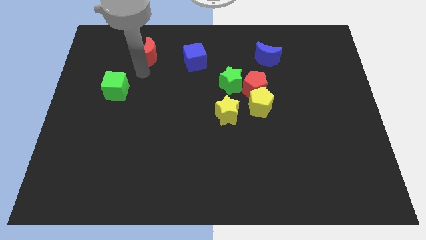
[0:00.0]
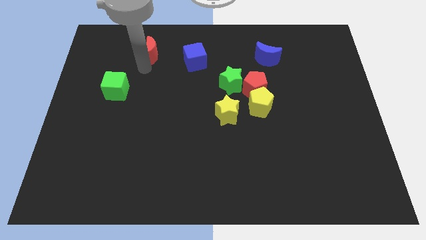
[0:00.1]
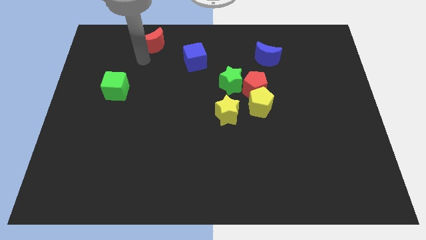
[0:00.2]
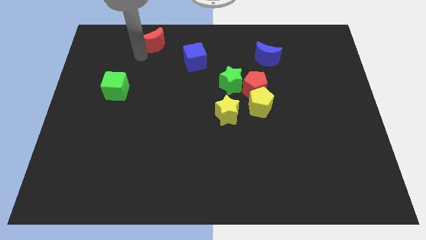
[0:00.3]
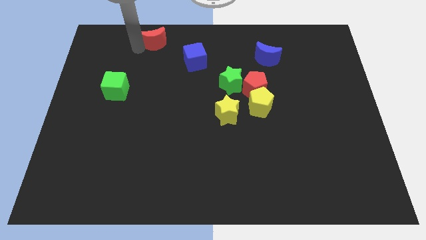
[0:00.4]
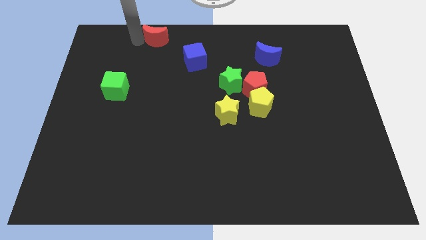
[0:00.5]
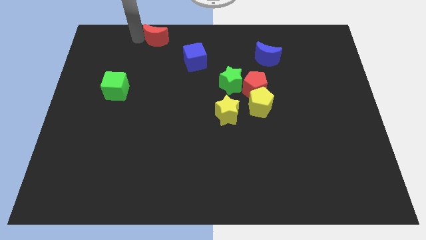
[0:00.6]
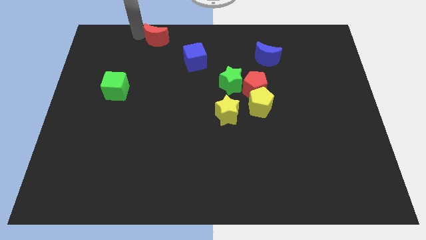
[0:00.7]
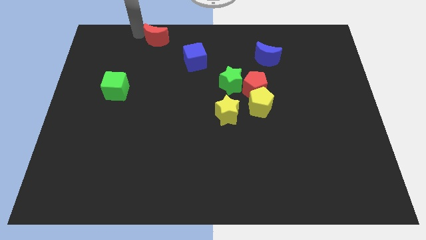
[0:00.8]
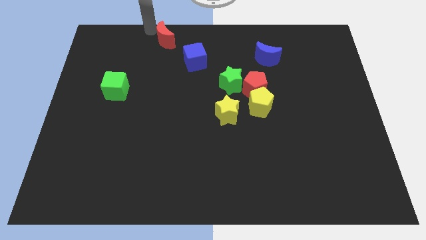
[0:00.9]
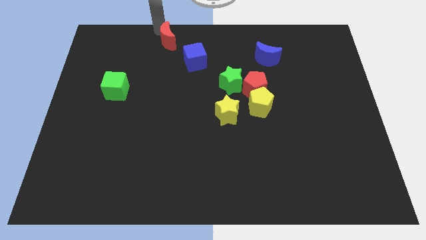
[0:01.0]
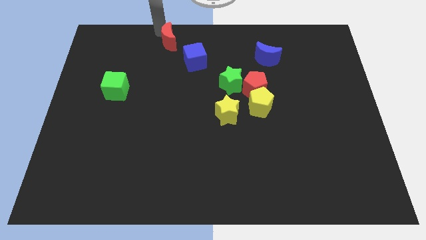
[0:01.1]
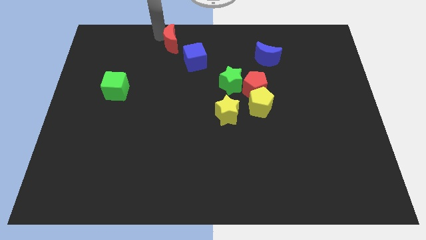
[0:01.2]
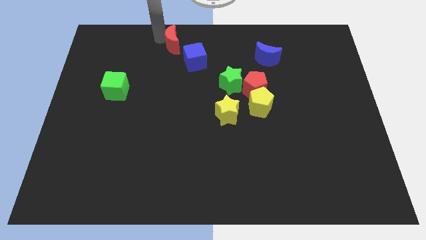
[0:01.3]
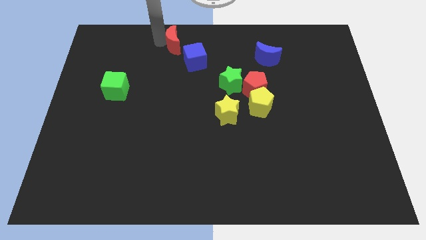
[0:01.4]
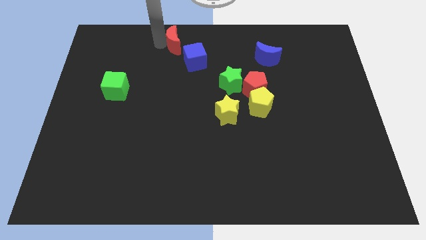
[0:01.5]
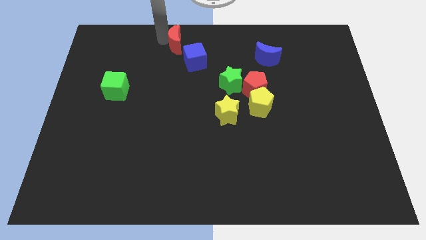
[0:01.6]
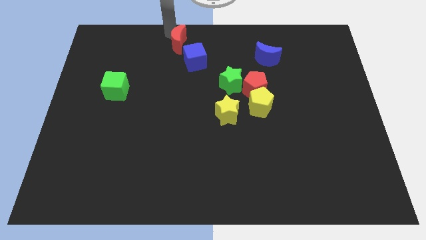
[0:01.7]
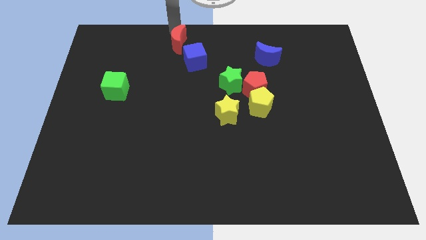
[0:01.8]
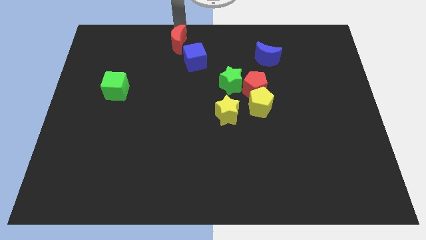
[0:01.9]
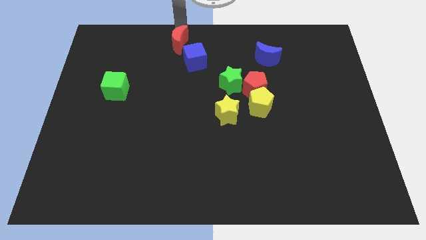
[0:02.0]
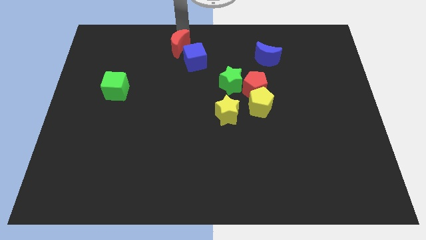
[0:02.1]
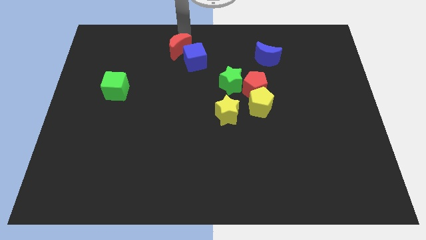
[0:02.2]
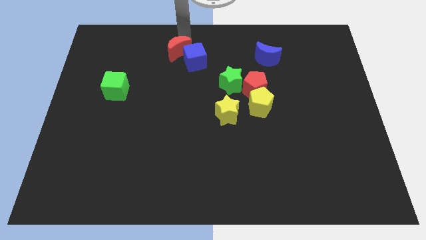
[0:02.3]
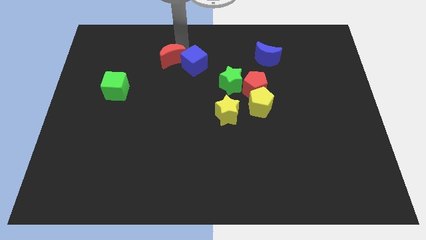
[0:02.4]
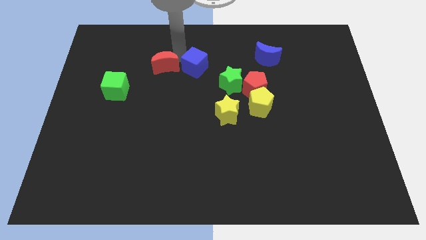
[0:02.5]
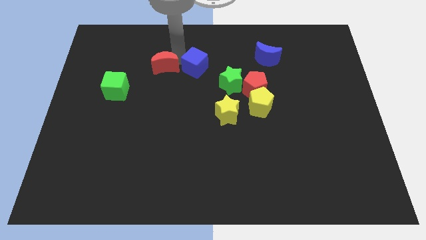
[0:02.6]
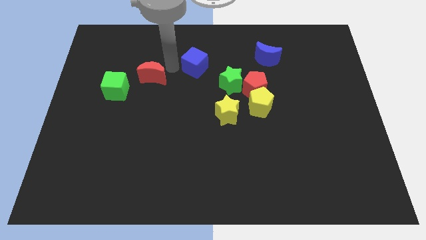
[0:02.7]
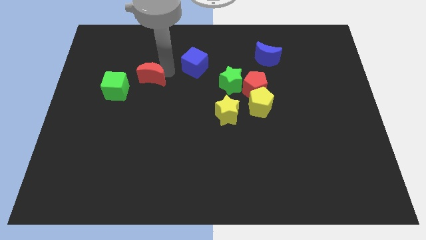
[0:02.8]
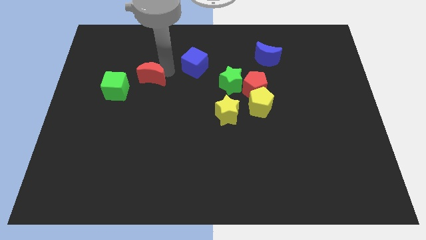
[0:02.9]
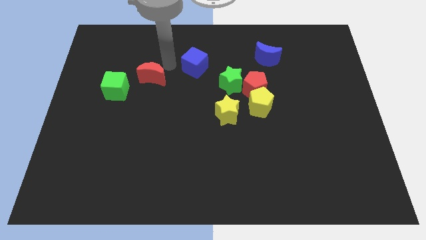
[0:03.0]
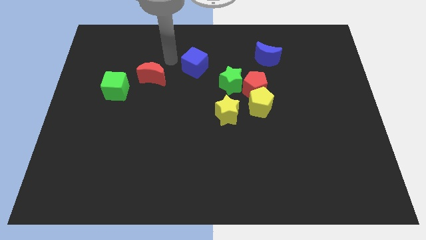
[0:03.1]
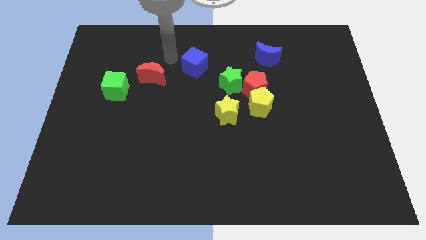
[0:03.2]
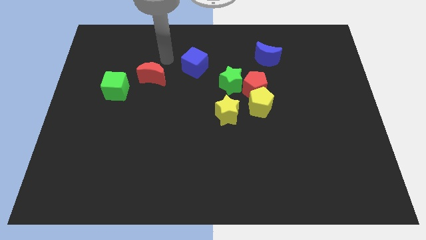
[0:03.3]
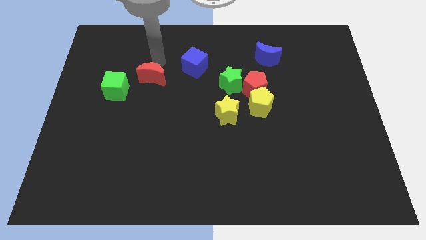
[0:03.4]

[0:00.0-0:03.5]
move the red crescent to the left of the green star

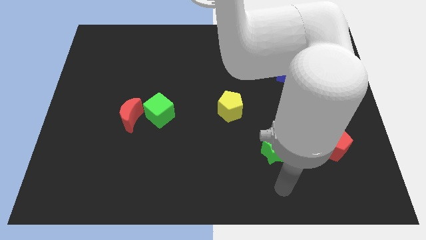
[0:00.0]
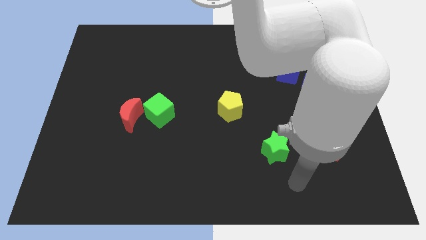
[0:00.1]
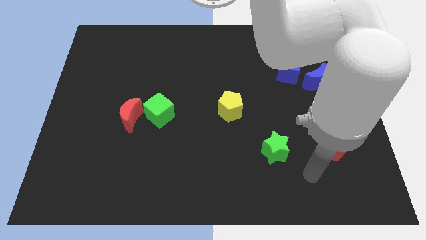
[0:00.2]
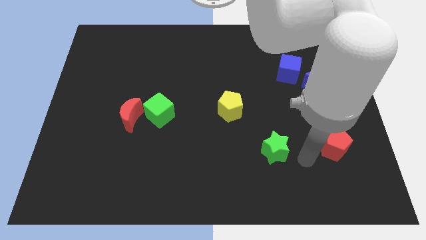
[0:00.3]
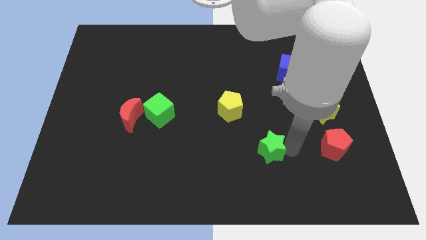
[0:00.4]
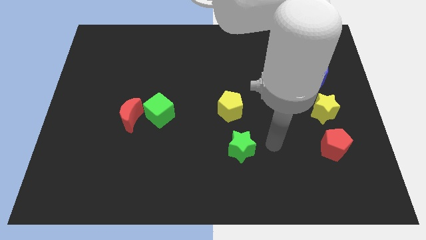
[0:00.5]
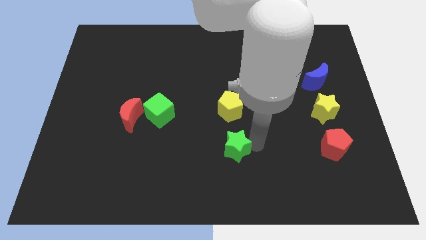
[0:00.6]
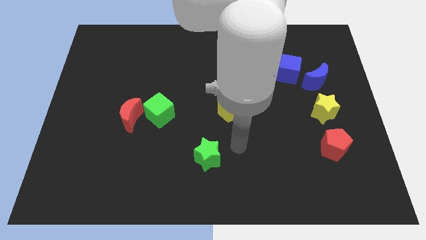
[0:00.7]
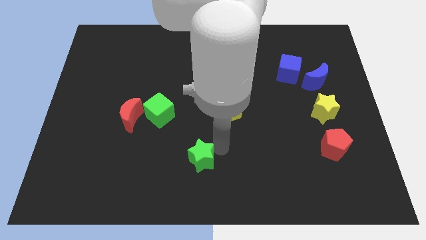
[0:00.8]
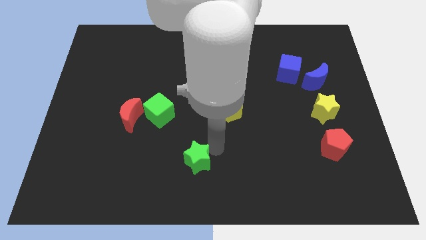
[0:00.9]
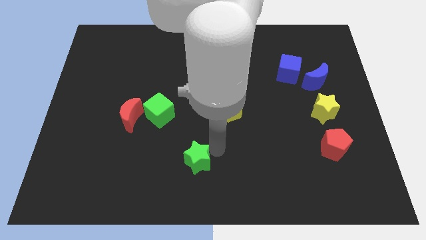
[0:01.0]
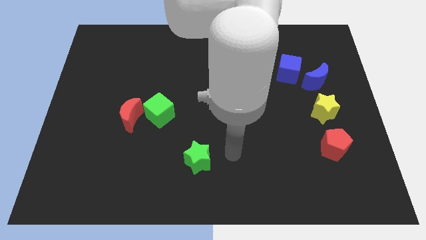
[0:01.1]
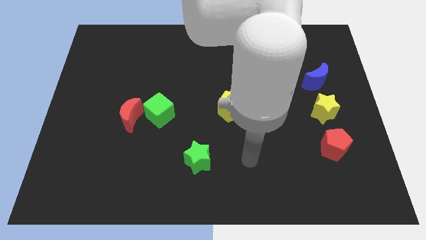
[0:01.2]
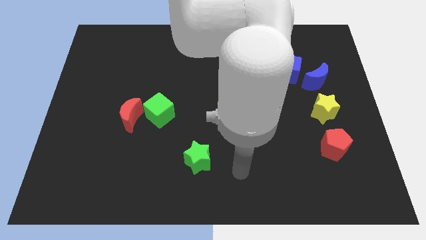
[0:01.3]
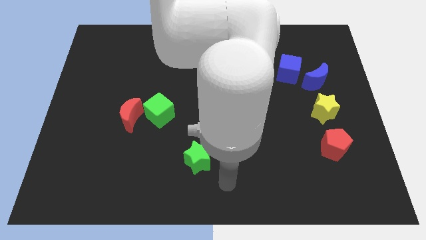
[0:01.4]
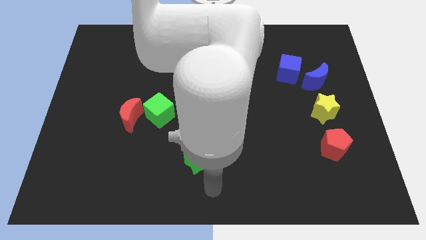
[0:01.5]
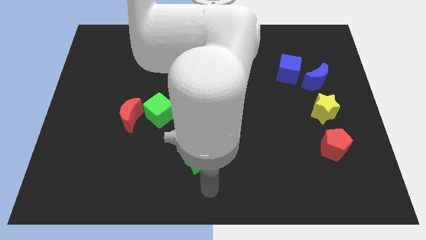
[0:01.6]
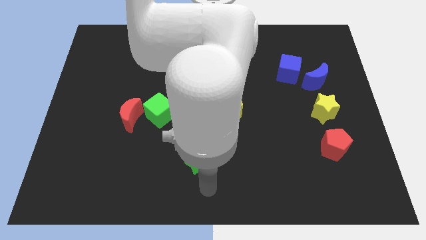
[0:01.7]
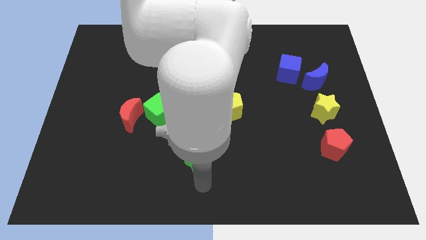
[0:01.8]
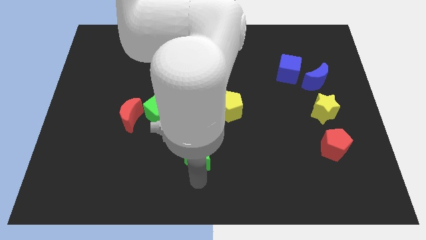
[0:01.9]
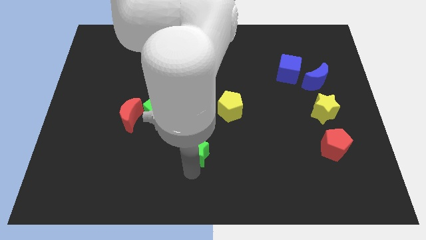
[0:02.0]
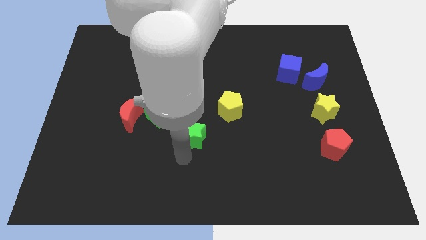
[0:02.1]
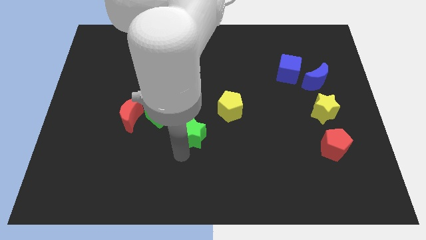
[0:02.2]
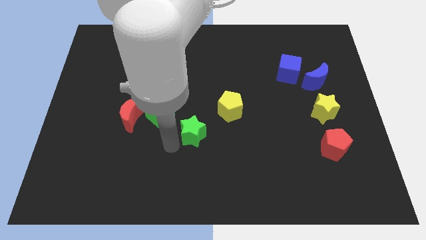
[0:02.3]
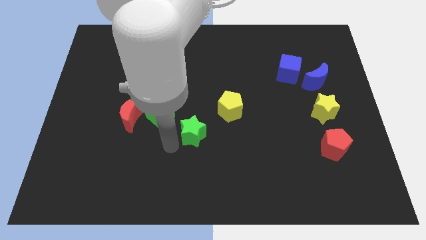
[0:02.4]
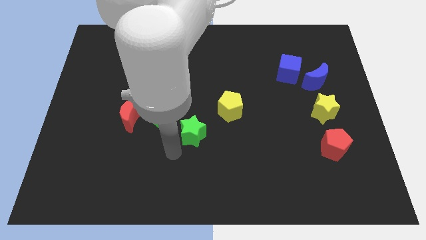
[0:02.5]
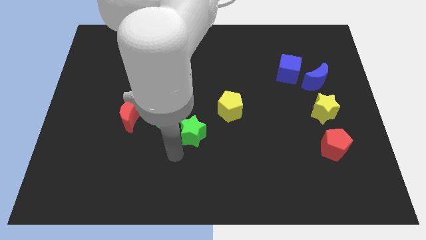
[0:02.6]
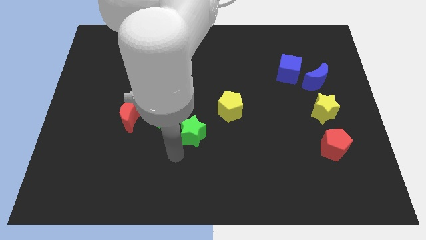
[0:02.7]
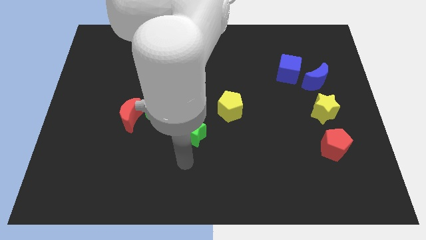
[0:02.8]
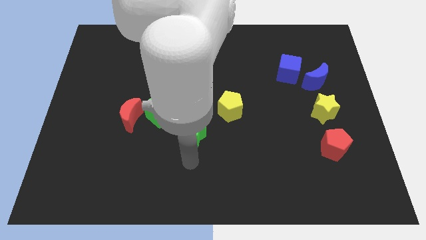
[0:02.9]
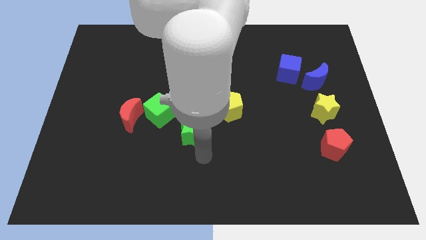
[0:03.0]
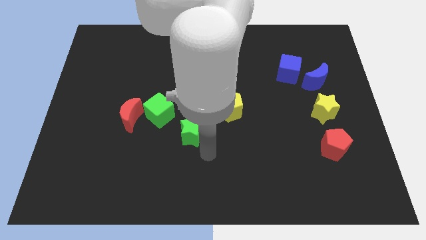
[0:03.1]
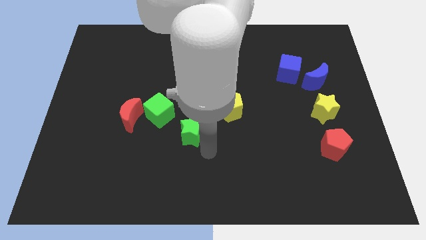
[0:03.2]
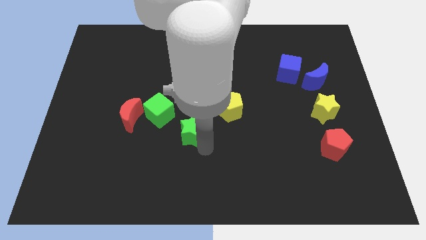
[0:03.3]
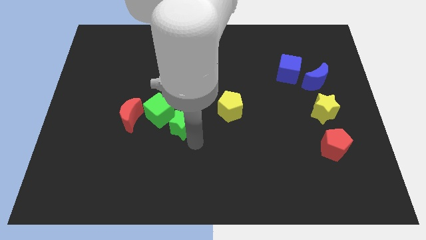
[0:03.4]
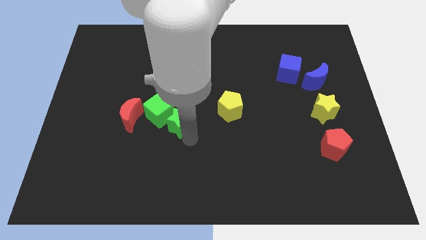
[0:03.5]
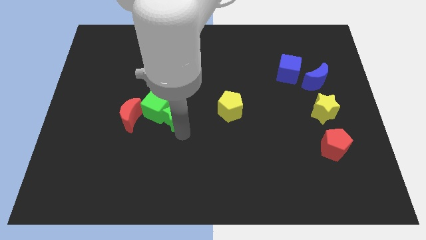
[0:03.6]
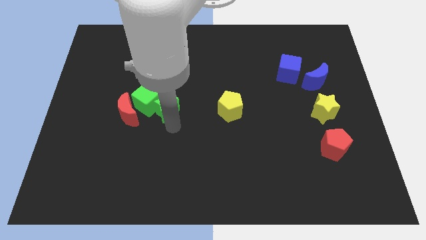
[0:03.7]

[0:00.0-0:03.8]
push the green star into the green cube

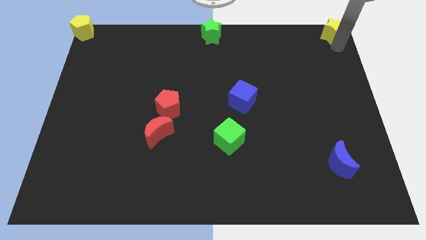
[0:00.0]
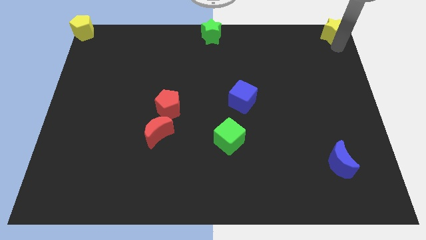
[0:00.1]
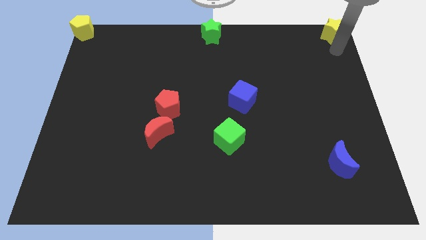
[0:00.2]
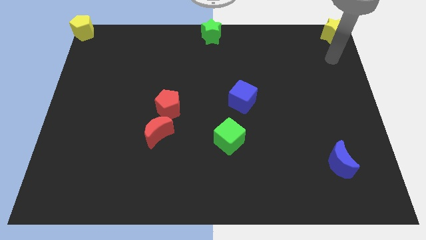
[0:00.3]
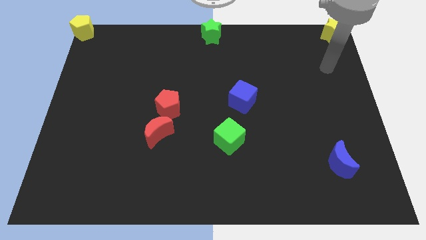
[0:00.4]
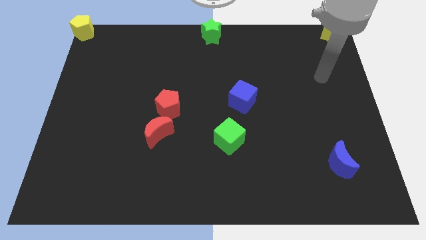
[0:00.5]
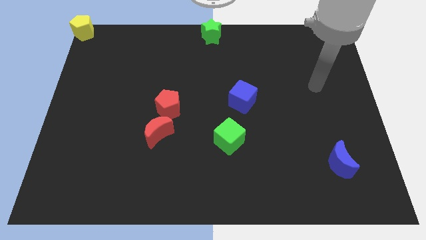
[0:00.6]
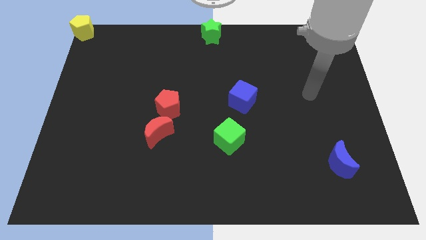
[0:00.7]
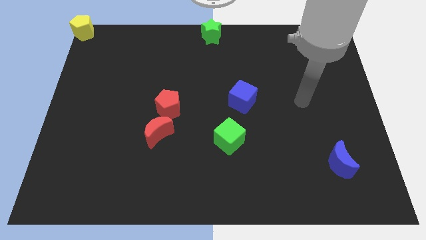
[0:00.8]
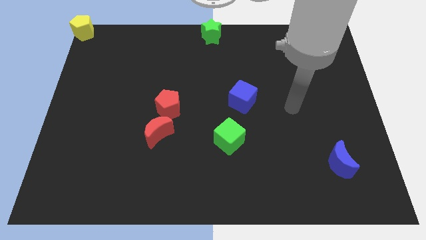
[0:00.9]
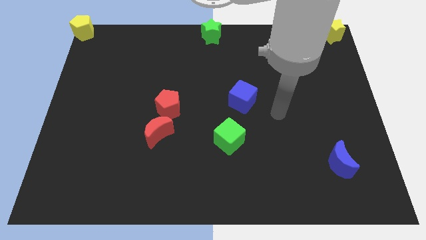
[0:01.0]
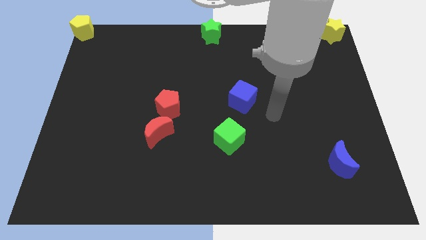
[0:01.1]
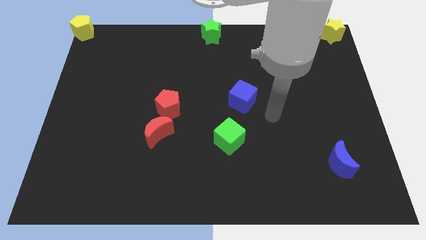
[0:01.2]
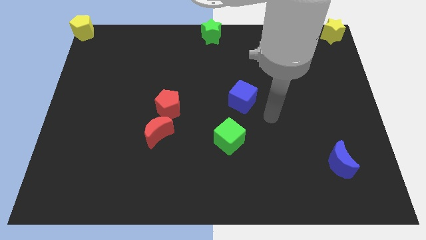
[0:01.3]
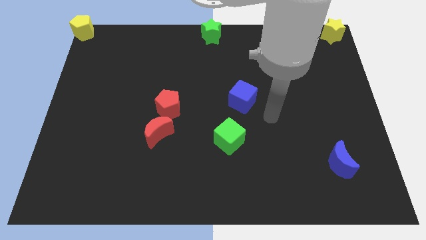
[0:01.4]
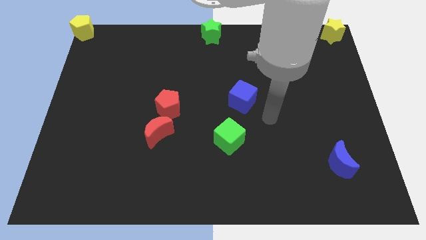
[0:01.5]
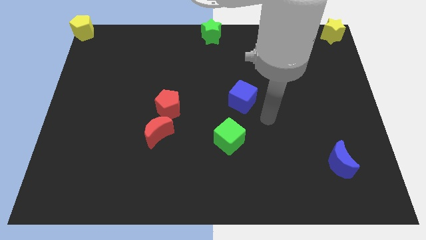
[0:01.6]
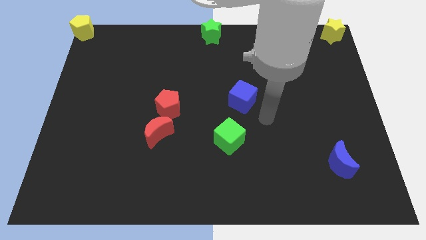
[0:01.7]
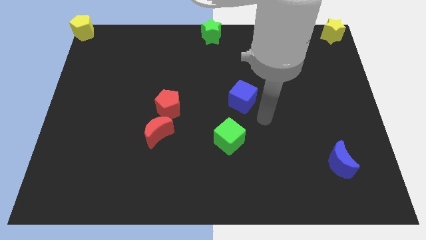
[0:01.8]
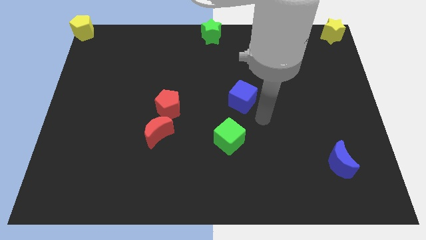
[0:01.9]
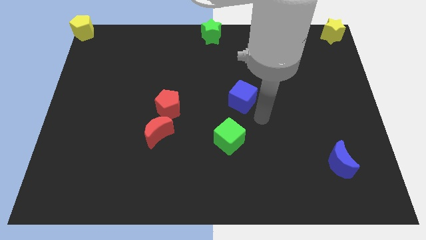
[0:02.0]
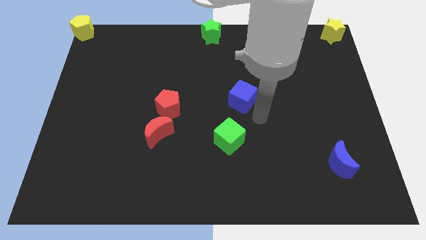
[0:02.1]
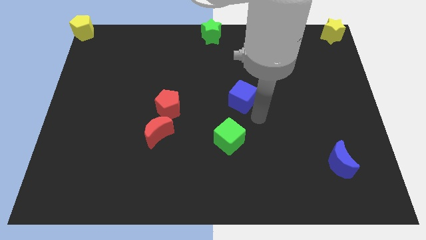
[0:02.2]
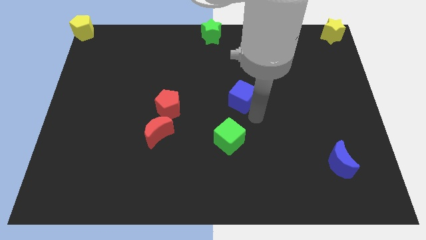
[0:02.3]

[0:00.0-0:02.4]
place your arm at the bottom right side of blue cube
